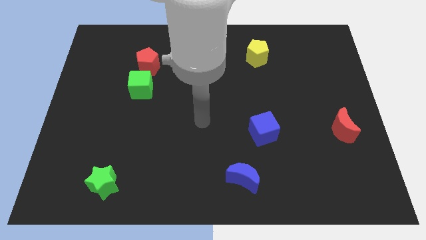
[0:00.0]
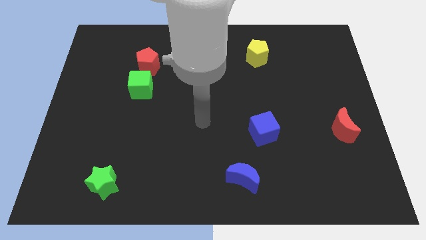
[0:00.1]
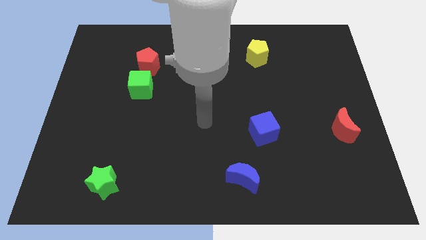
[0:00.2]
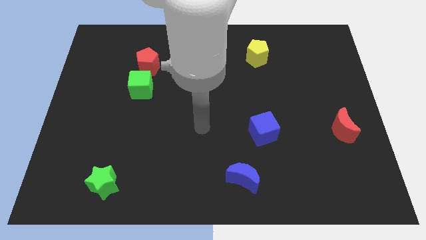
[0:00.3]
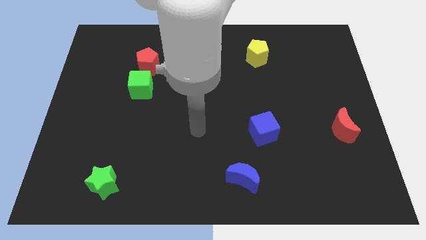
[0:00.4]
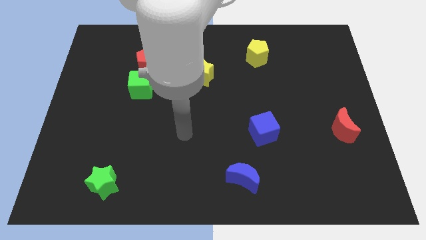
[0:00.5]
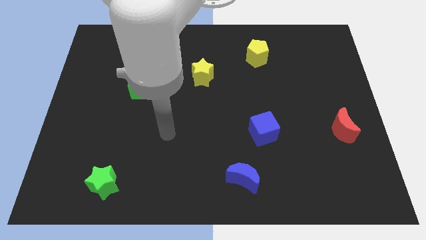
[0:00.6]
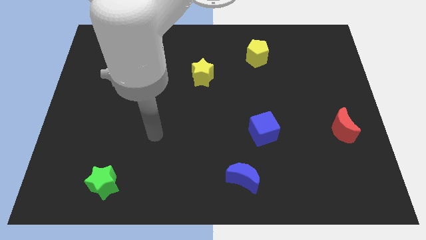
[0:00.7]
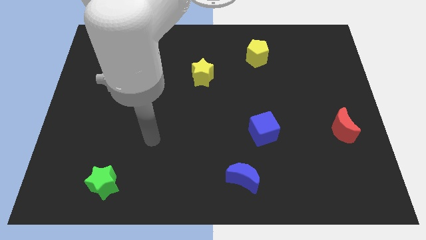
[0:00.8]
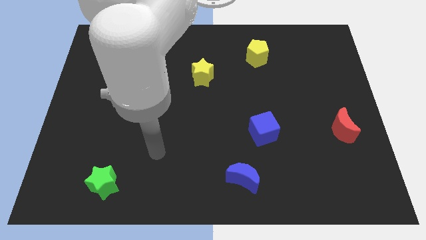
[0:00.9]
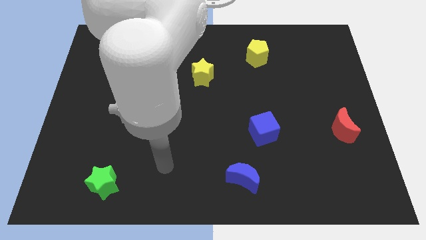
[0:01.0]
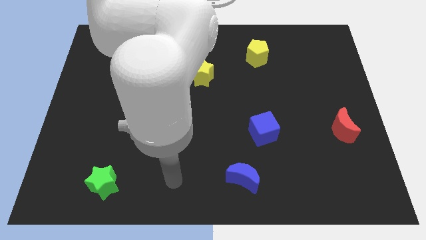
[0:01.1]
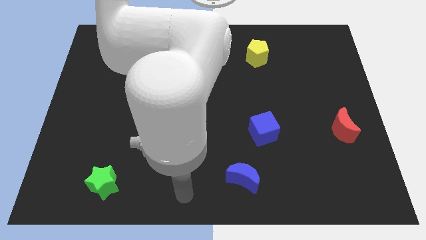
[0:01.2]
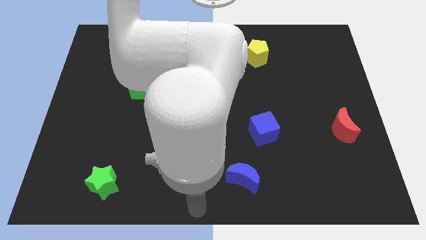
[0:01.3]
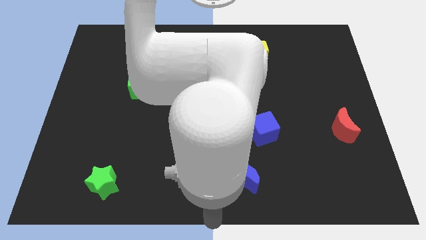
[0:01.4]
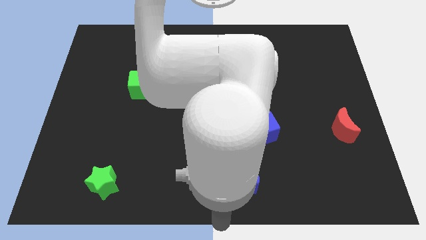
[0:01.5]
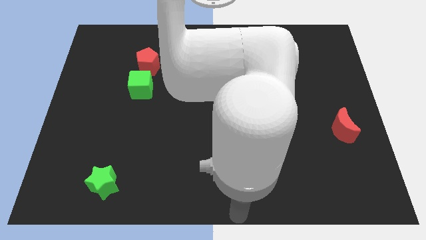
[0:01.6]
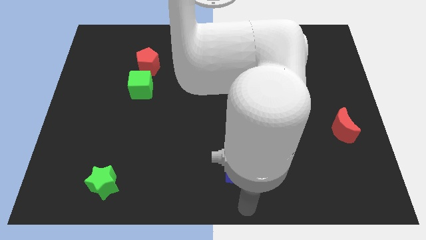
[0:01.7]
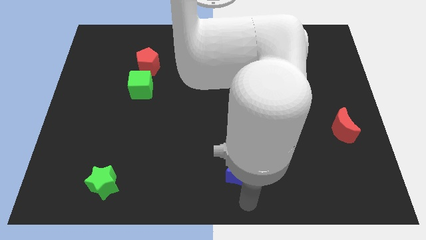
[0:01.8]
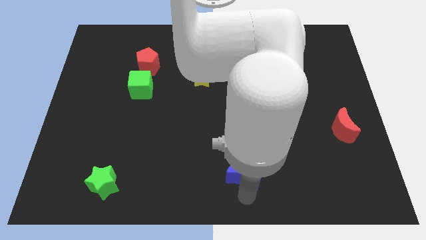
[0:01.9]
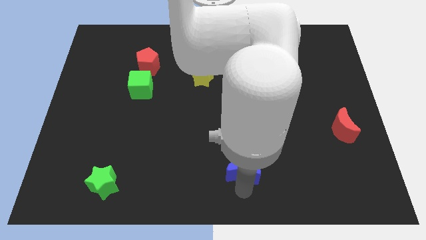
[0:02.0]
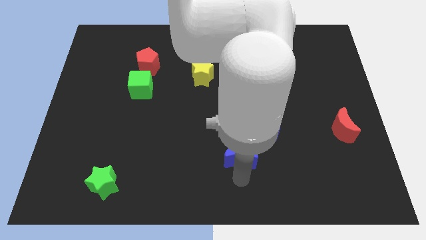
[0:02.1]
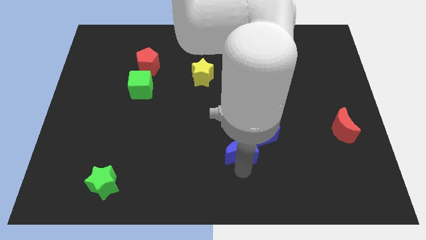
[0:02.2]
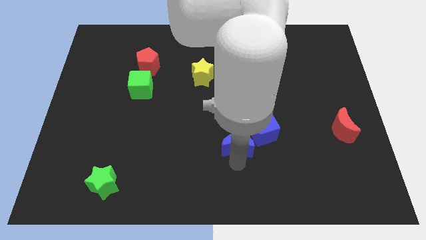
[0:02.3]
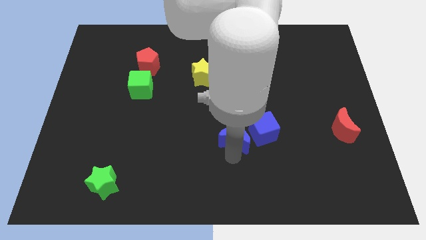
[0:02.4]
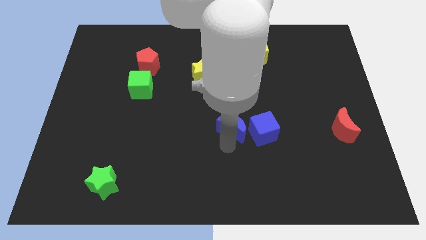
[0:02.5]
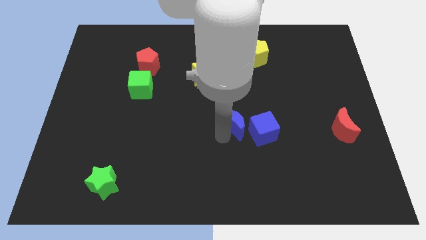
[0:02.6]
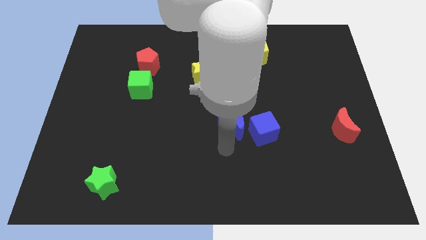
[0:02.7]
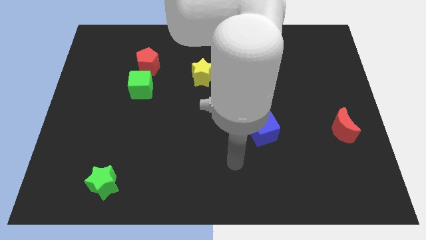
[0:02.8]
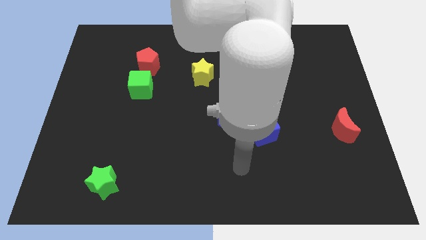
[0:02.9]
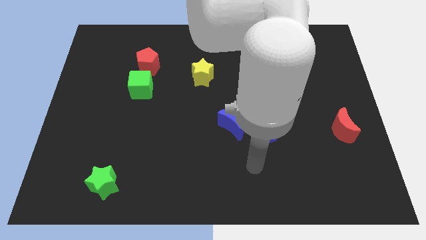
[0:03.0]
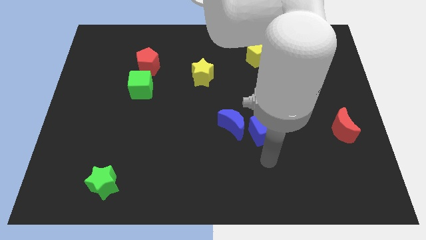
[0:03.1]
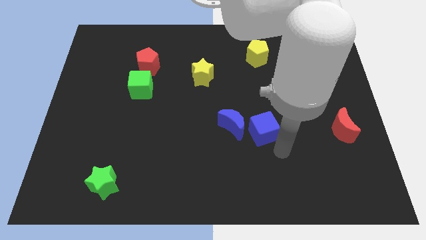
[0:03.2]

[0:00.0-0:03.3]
place the blue moon to the left of the blue cube

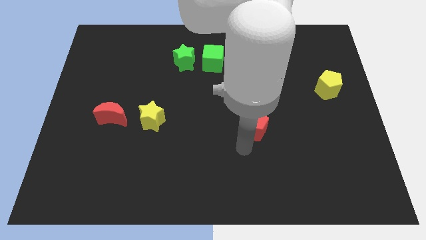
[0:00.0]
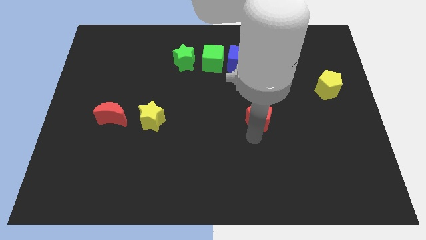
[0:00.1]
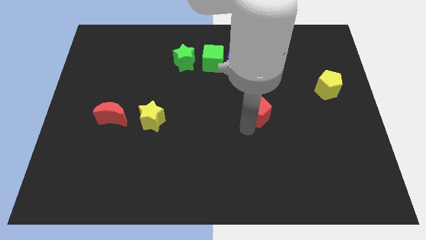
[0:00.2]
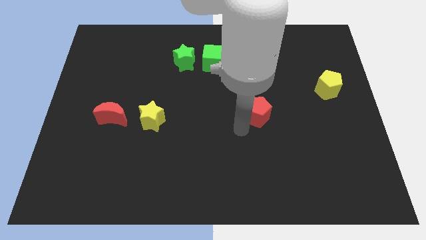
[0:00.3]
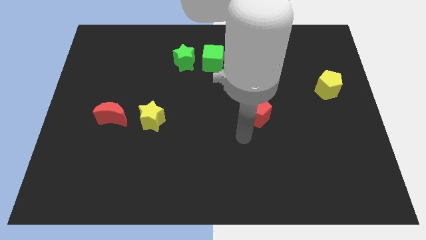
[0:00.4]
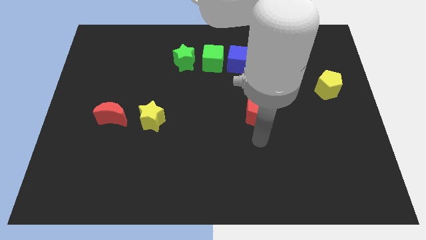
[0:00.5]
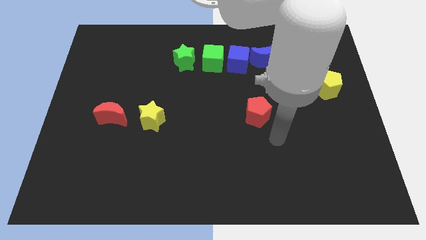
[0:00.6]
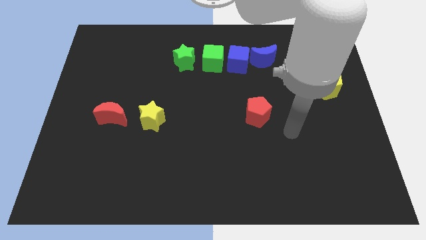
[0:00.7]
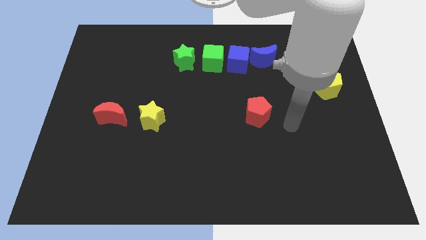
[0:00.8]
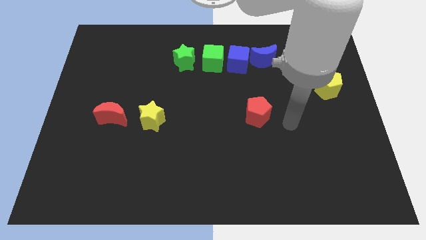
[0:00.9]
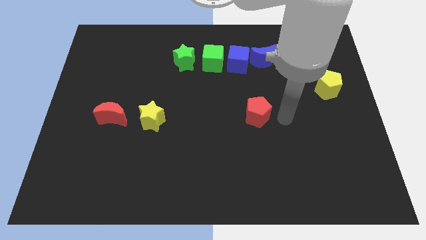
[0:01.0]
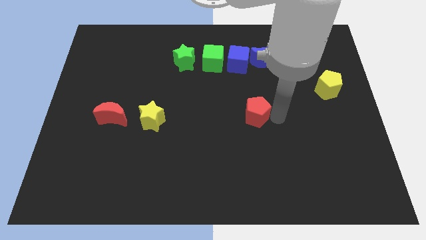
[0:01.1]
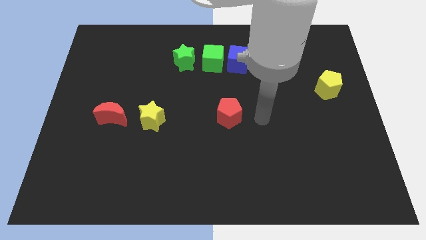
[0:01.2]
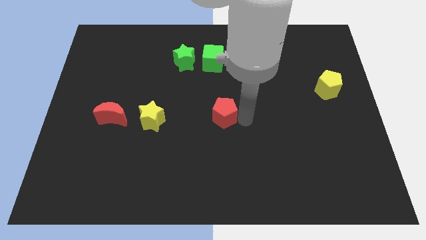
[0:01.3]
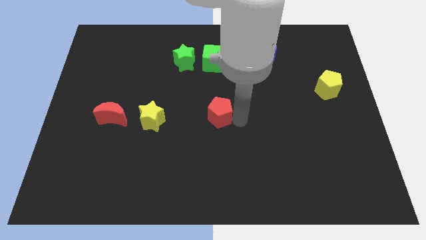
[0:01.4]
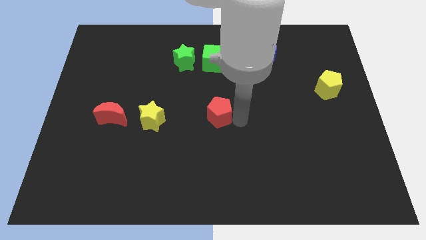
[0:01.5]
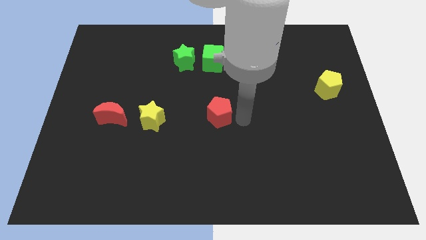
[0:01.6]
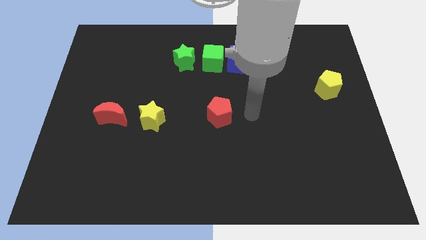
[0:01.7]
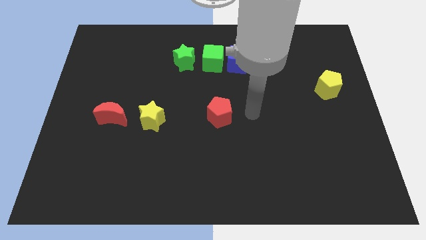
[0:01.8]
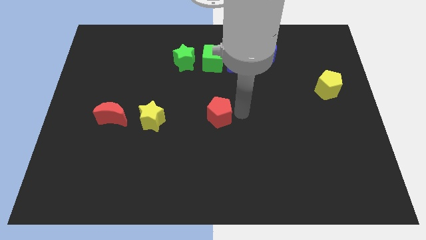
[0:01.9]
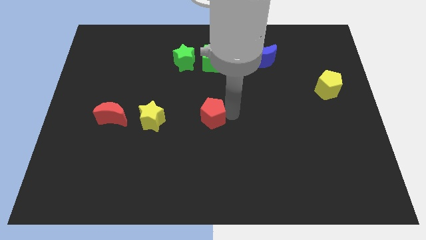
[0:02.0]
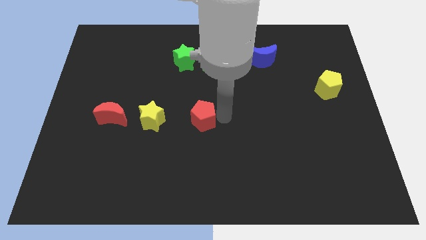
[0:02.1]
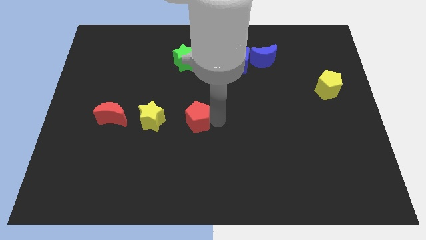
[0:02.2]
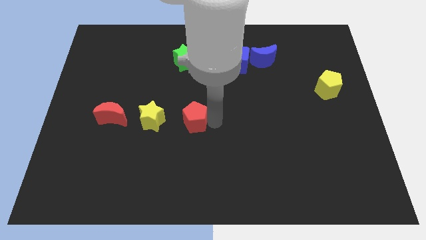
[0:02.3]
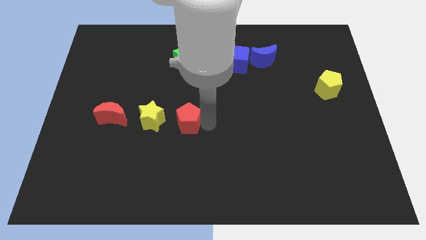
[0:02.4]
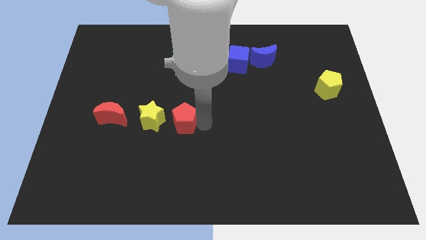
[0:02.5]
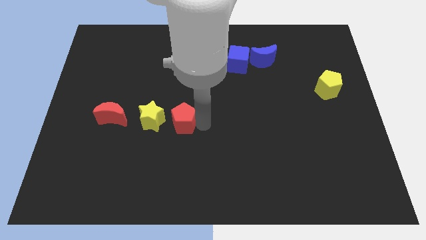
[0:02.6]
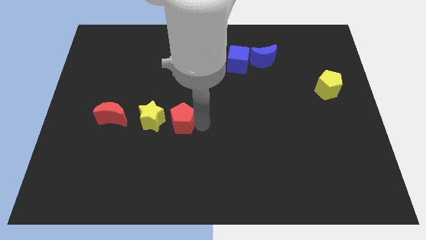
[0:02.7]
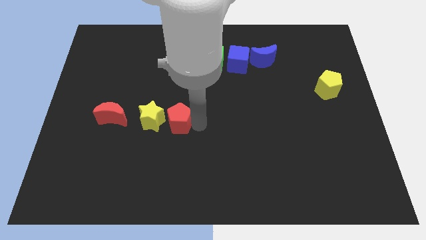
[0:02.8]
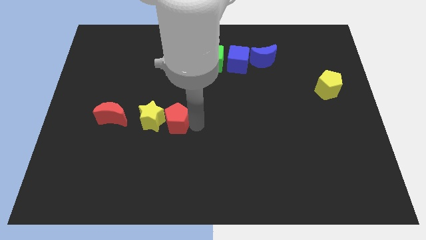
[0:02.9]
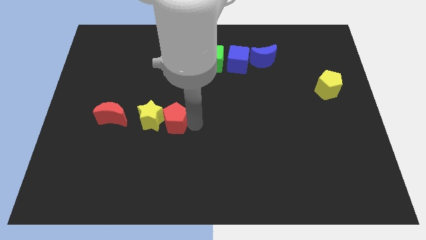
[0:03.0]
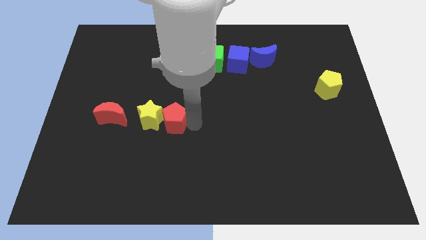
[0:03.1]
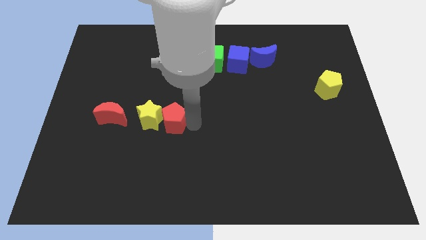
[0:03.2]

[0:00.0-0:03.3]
push red pentagon into yellow star

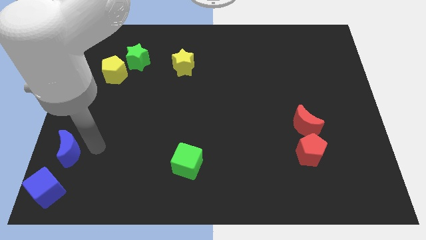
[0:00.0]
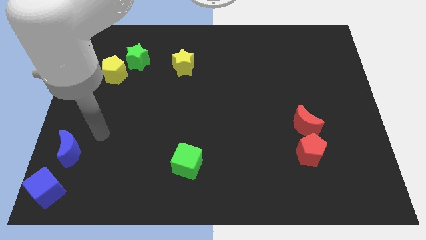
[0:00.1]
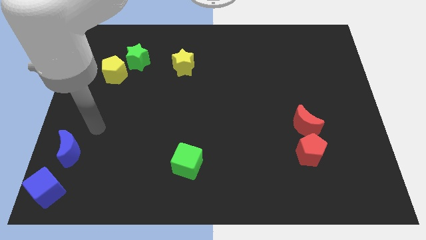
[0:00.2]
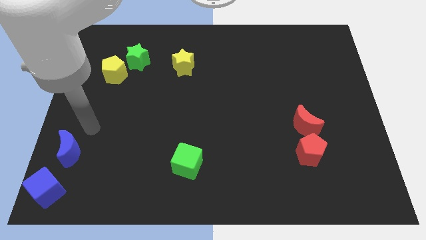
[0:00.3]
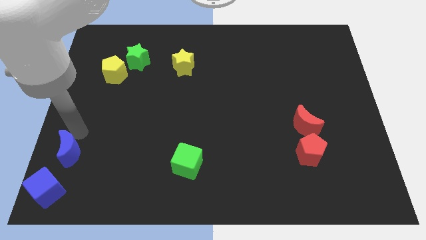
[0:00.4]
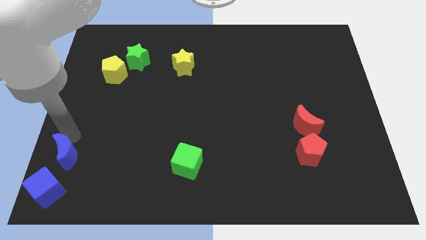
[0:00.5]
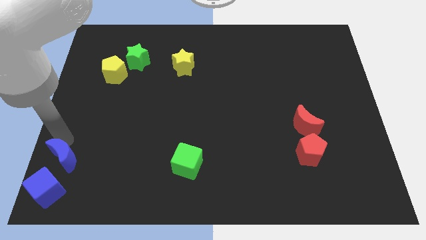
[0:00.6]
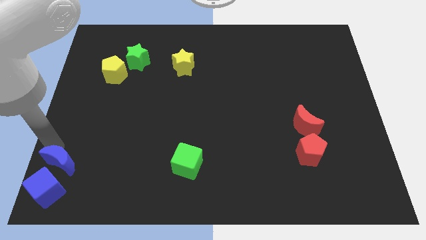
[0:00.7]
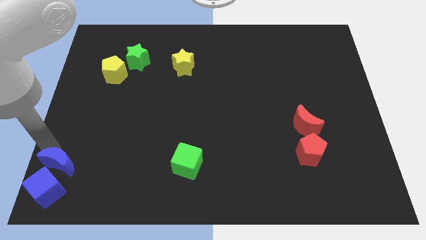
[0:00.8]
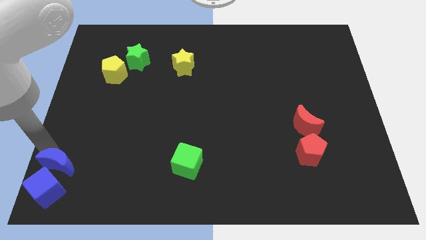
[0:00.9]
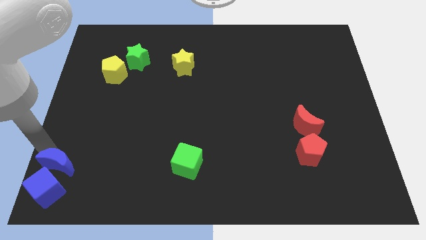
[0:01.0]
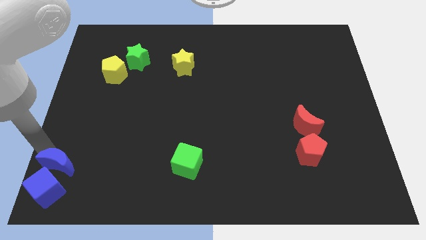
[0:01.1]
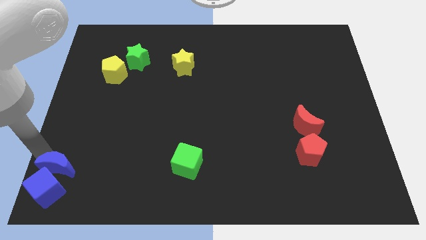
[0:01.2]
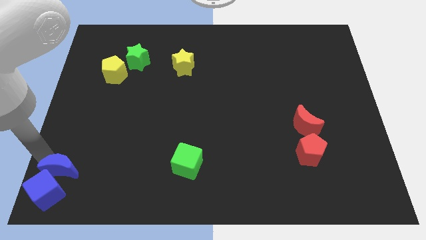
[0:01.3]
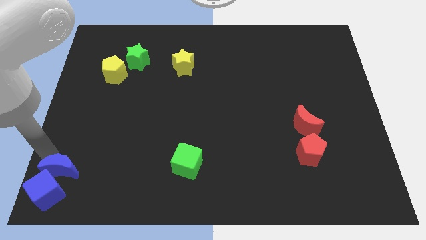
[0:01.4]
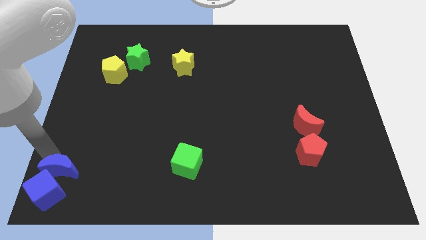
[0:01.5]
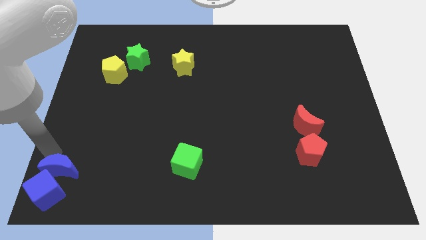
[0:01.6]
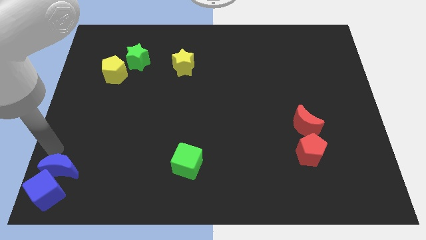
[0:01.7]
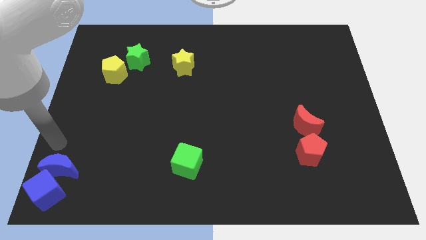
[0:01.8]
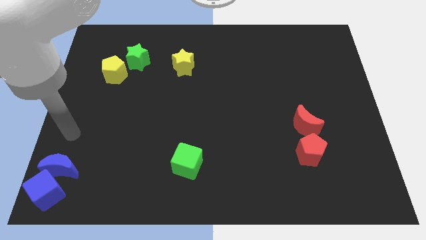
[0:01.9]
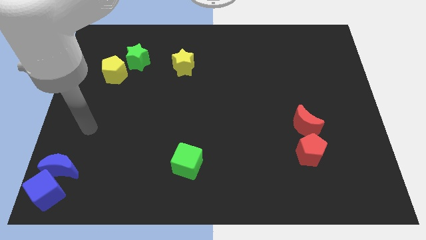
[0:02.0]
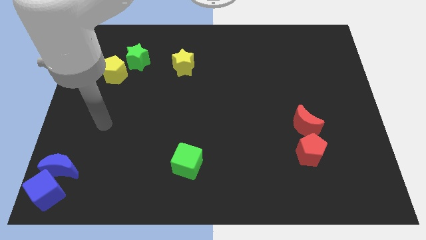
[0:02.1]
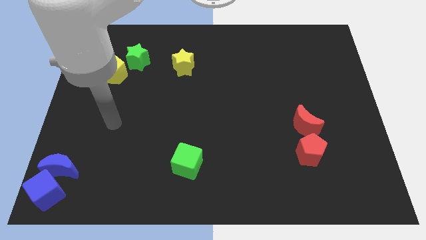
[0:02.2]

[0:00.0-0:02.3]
push the blue crescent into the blue cube

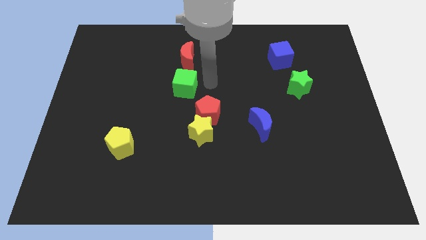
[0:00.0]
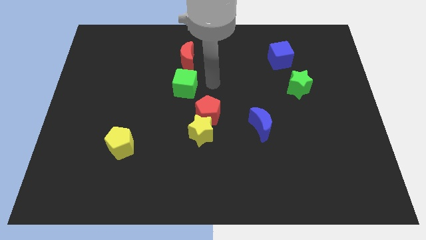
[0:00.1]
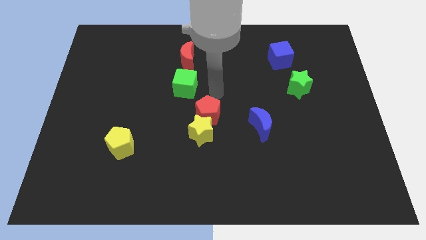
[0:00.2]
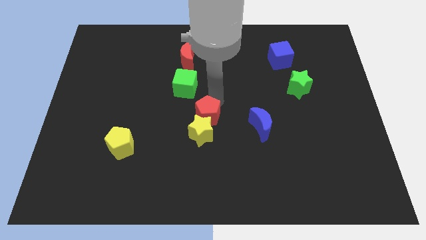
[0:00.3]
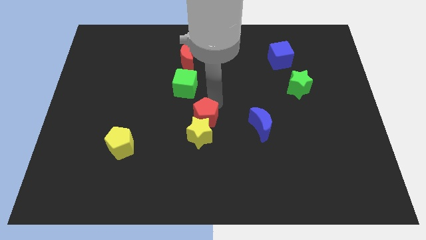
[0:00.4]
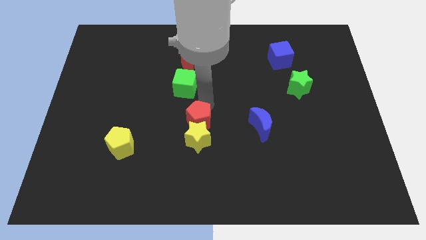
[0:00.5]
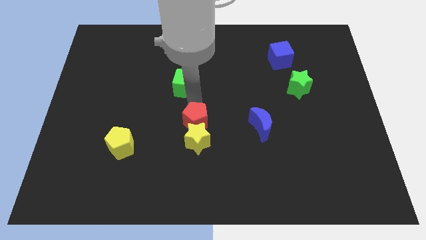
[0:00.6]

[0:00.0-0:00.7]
slightly touch to the red pentagon
